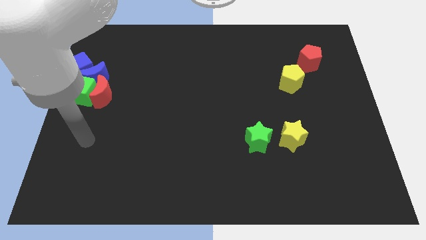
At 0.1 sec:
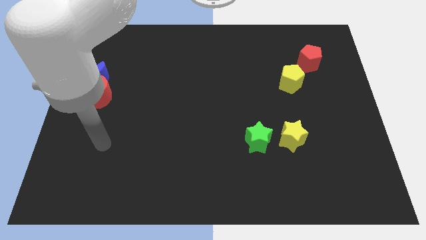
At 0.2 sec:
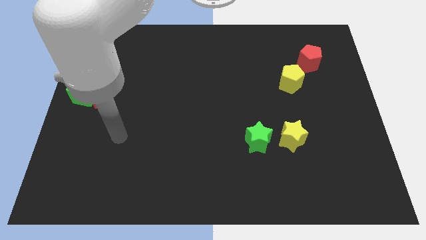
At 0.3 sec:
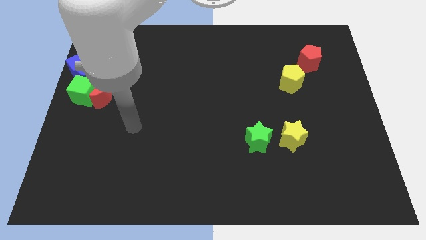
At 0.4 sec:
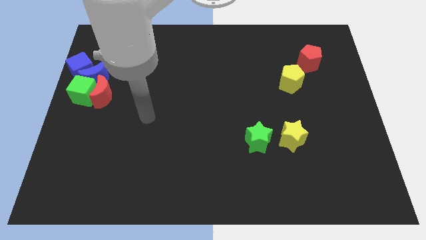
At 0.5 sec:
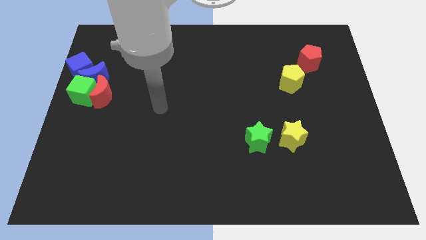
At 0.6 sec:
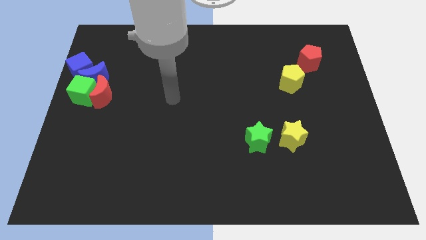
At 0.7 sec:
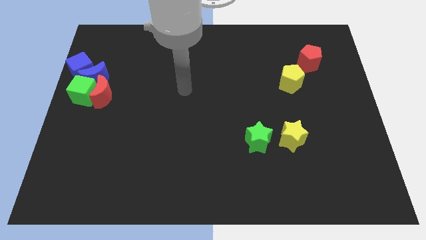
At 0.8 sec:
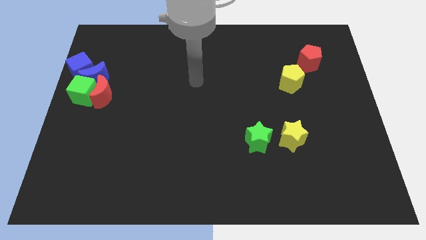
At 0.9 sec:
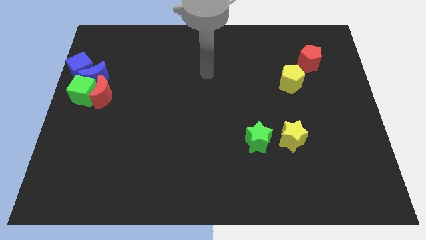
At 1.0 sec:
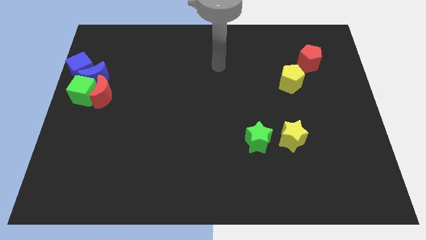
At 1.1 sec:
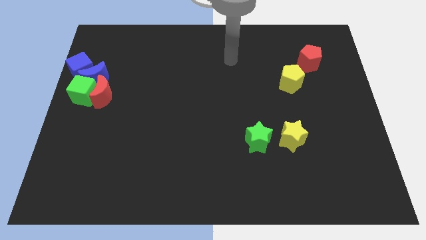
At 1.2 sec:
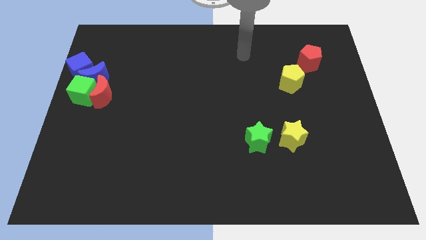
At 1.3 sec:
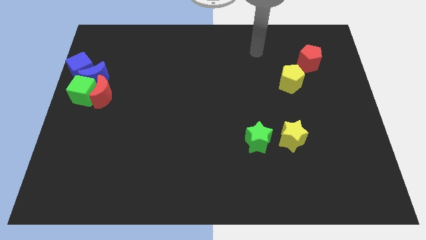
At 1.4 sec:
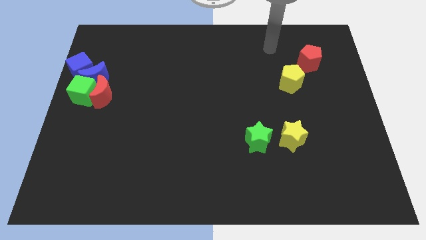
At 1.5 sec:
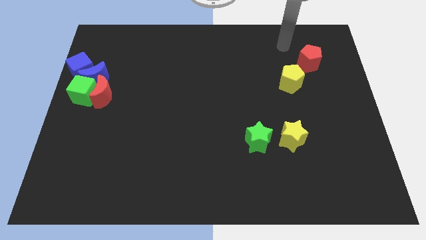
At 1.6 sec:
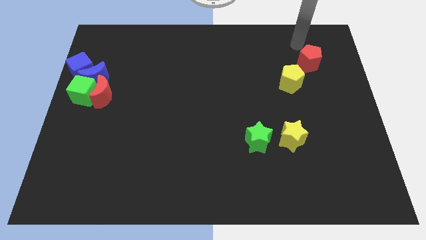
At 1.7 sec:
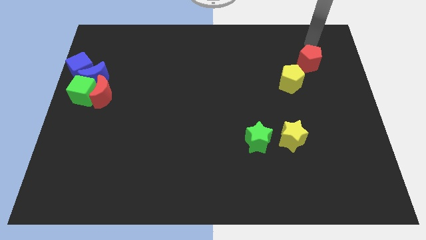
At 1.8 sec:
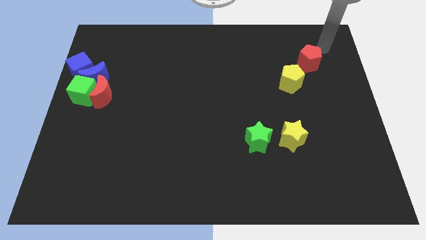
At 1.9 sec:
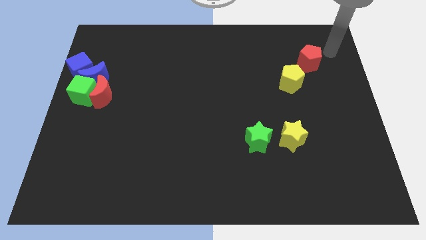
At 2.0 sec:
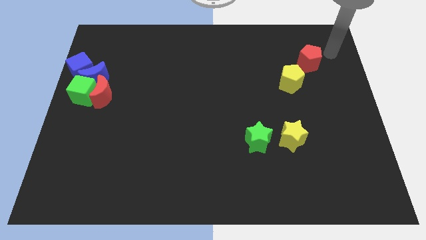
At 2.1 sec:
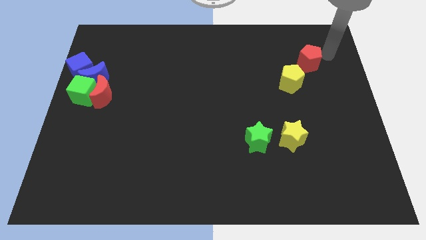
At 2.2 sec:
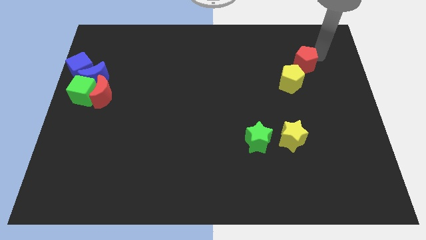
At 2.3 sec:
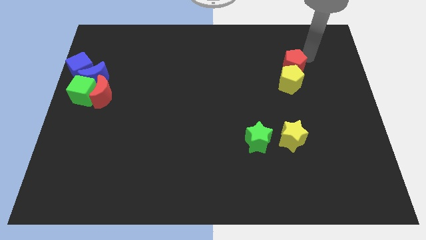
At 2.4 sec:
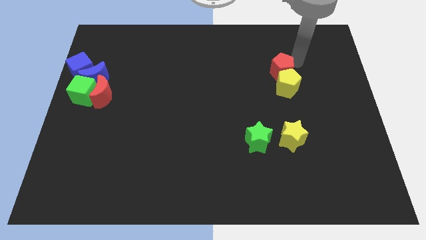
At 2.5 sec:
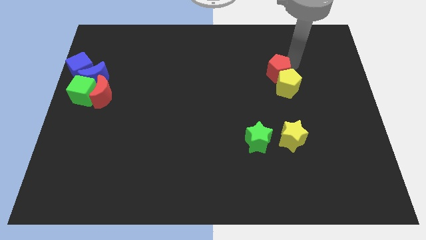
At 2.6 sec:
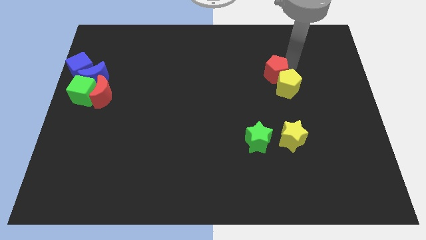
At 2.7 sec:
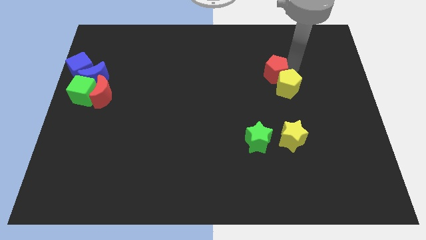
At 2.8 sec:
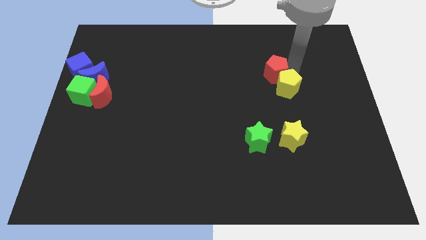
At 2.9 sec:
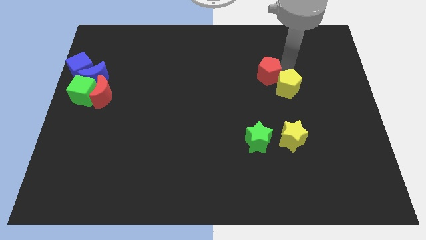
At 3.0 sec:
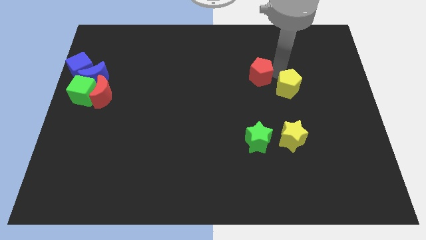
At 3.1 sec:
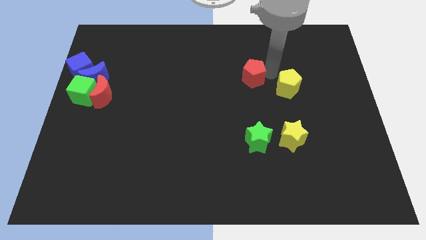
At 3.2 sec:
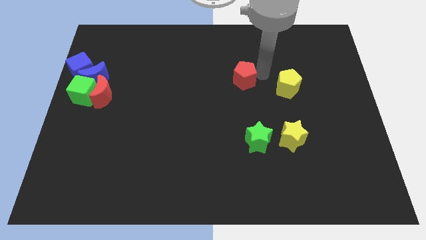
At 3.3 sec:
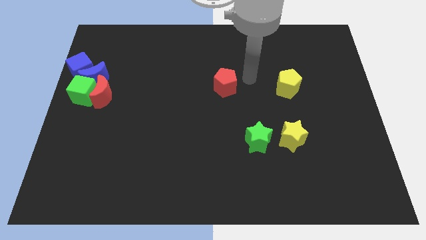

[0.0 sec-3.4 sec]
put the red pentagon to the left side of the yellow pentagon

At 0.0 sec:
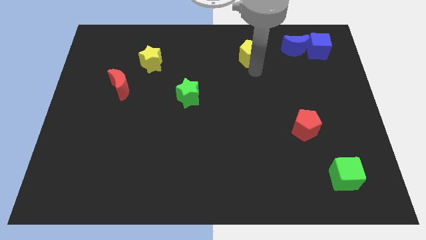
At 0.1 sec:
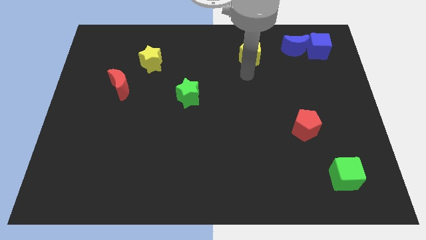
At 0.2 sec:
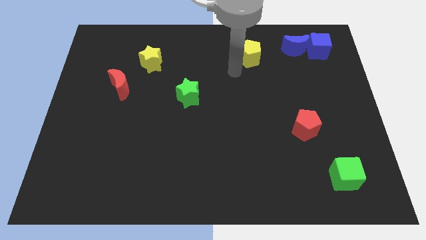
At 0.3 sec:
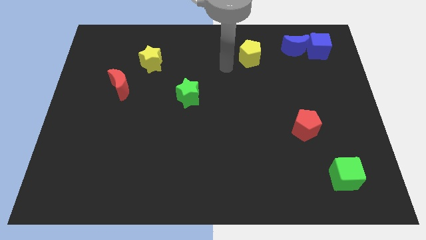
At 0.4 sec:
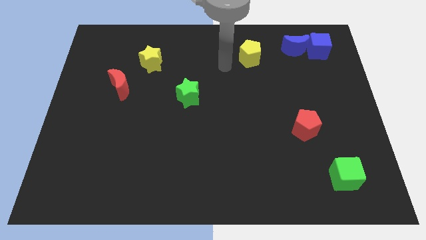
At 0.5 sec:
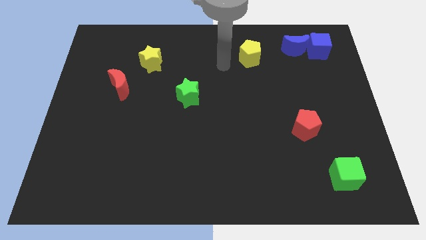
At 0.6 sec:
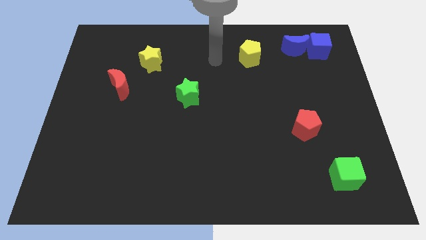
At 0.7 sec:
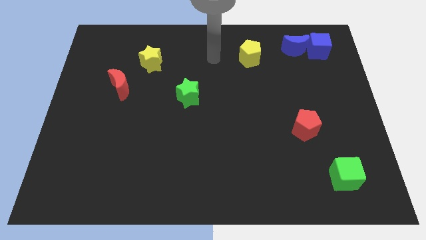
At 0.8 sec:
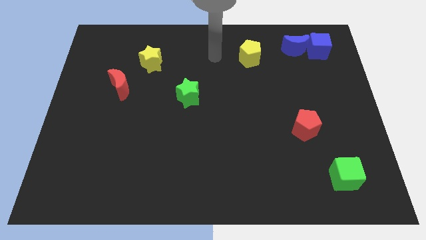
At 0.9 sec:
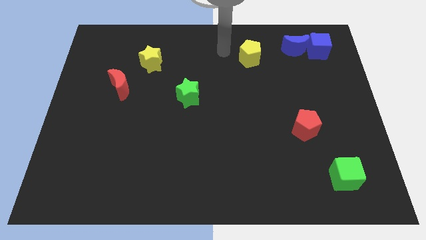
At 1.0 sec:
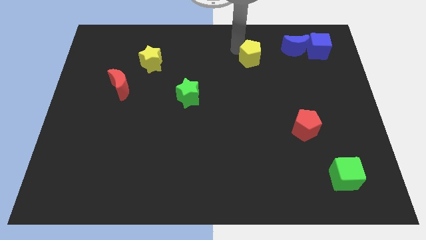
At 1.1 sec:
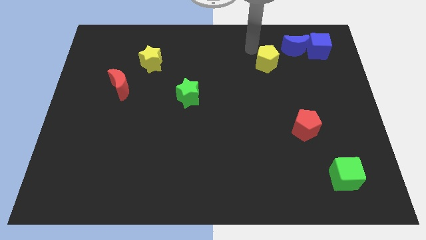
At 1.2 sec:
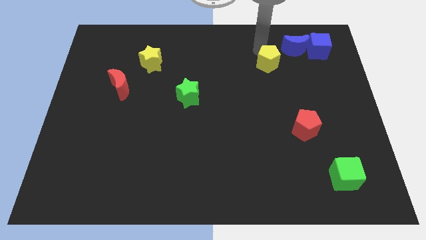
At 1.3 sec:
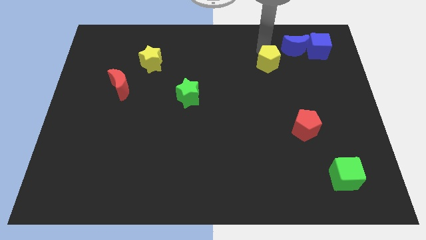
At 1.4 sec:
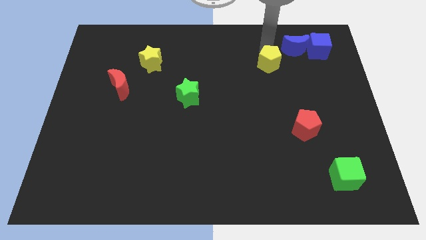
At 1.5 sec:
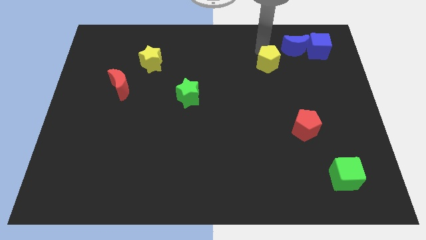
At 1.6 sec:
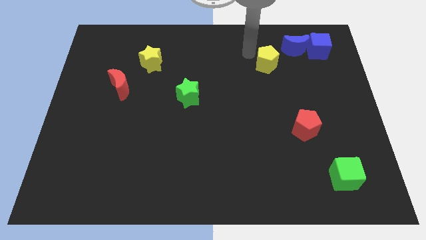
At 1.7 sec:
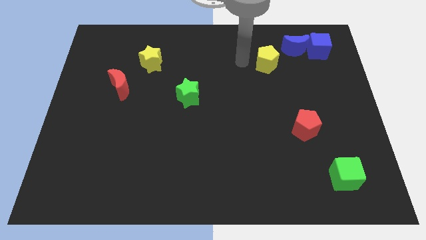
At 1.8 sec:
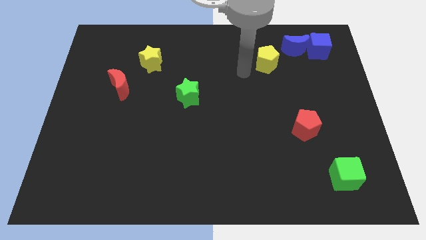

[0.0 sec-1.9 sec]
push the yellow pentagon parallel to the right of the yellow star

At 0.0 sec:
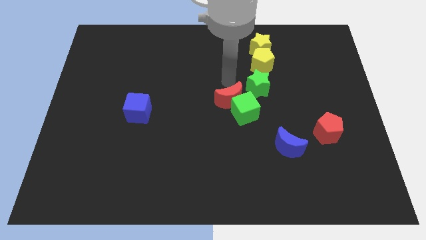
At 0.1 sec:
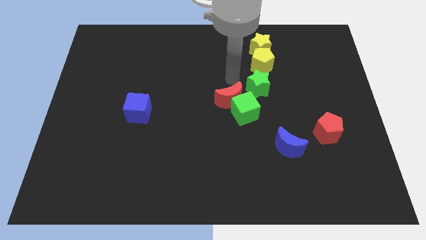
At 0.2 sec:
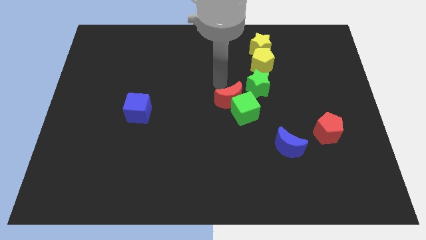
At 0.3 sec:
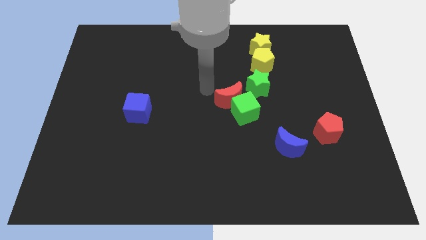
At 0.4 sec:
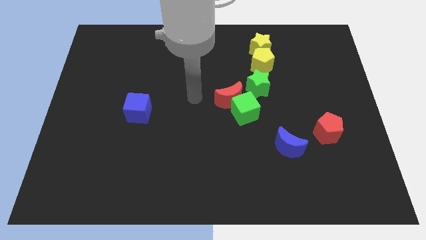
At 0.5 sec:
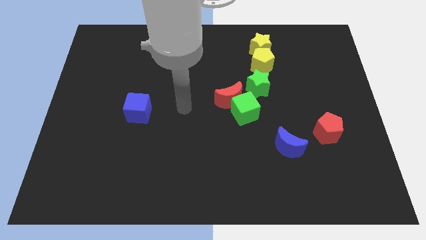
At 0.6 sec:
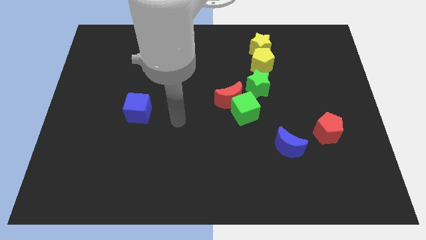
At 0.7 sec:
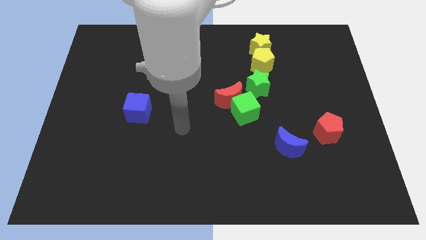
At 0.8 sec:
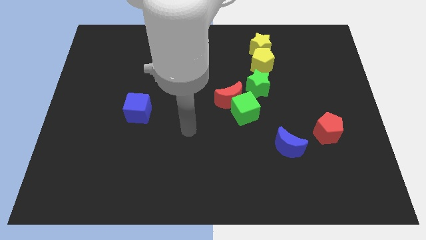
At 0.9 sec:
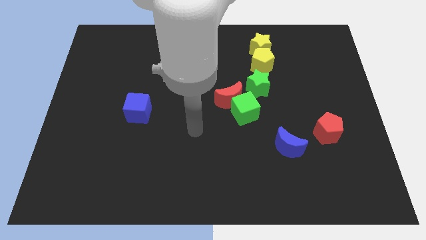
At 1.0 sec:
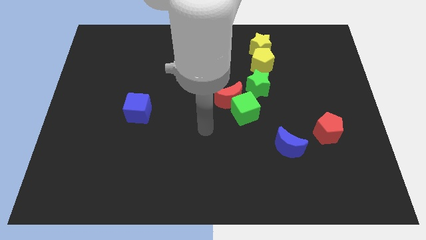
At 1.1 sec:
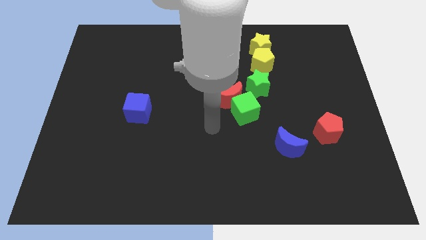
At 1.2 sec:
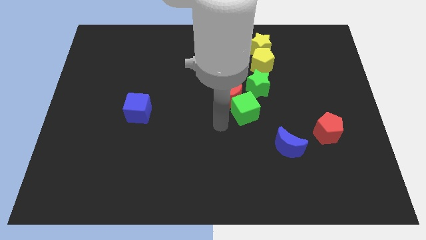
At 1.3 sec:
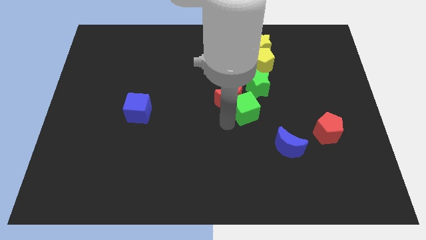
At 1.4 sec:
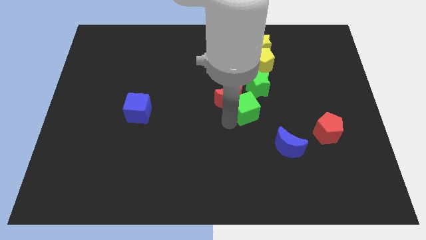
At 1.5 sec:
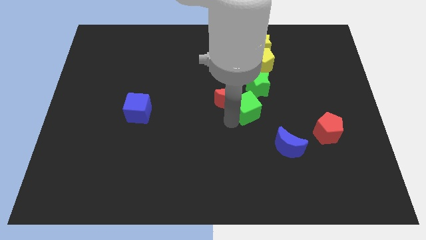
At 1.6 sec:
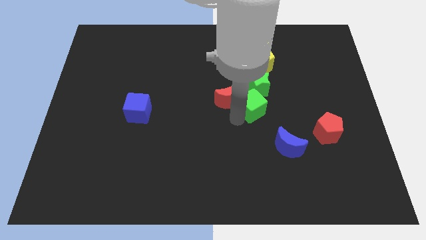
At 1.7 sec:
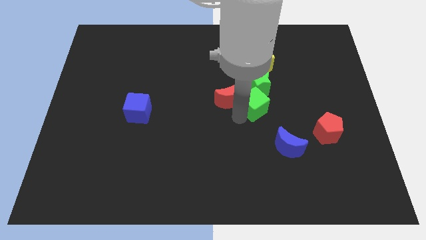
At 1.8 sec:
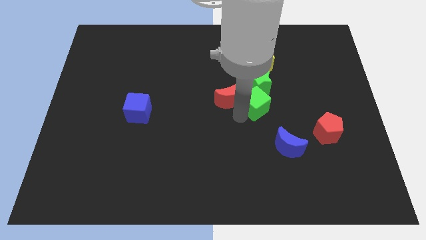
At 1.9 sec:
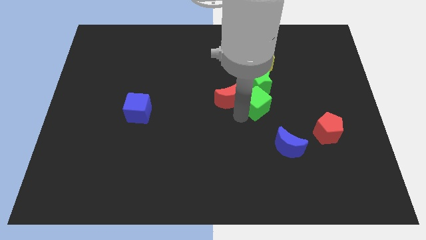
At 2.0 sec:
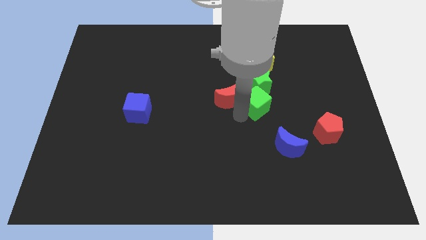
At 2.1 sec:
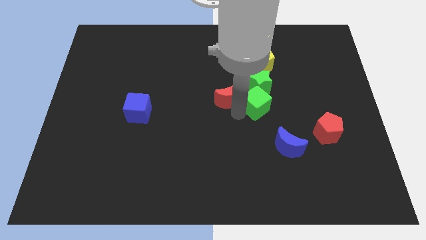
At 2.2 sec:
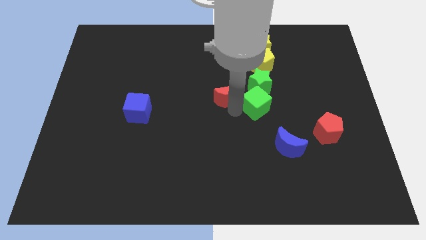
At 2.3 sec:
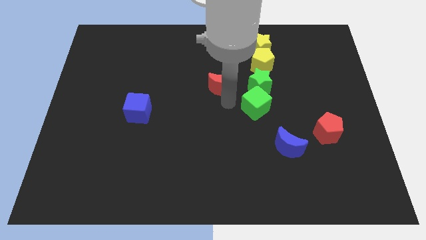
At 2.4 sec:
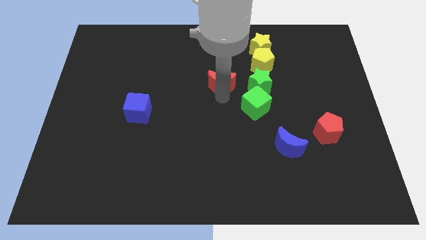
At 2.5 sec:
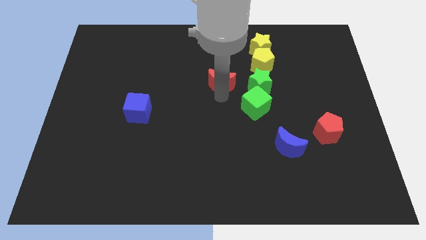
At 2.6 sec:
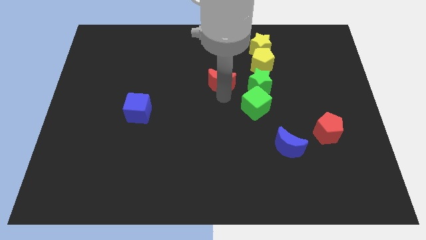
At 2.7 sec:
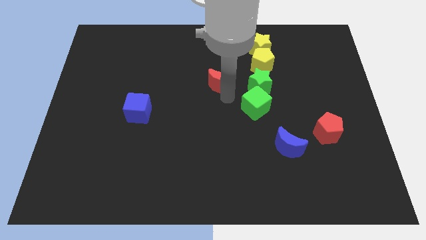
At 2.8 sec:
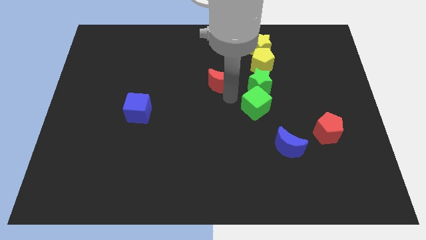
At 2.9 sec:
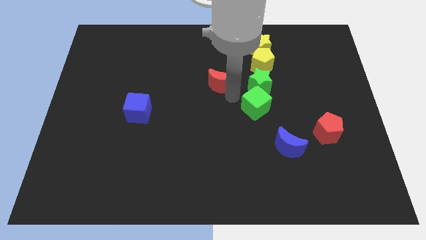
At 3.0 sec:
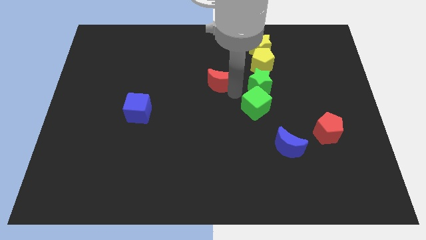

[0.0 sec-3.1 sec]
push the green cube into green star

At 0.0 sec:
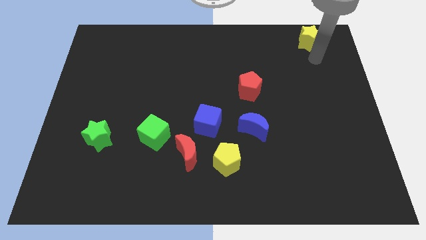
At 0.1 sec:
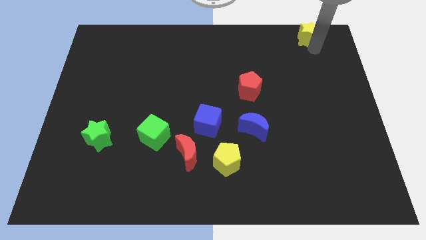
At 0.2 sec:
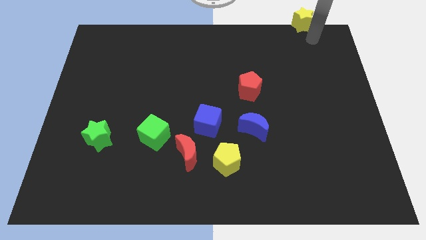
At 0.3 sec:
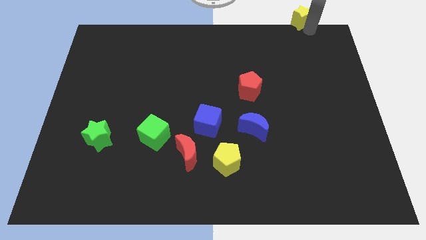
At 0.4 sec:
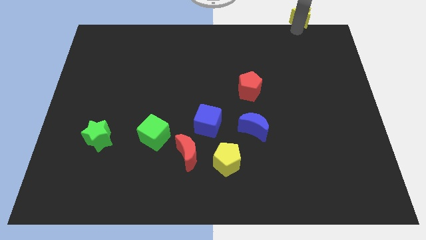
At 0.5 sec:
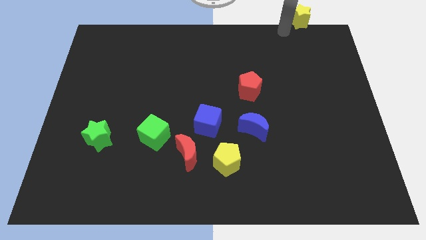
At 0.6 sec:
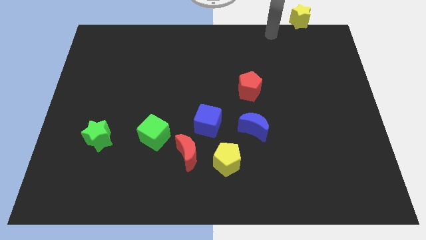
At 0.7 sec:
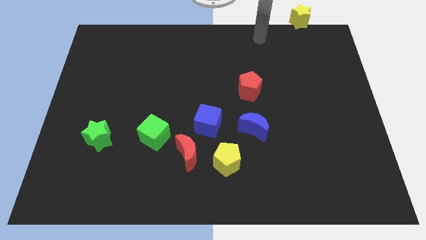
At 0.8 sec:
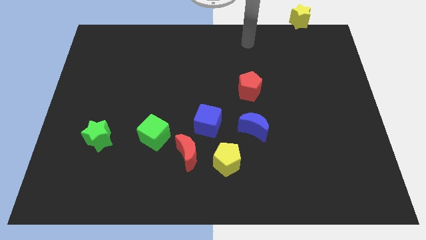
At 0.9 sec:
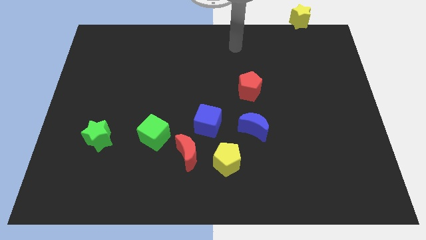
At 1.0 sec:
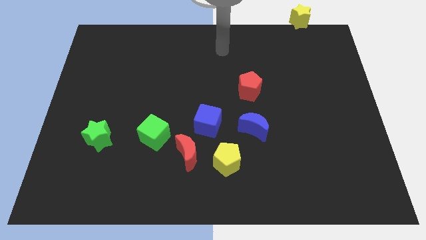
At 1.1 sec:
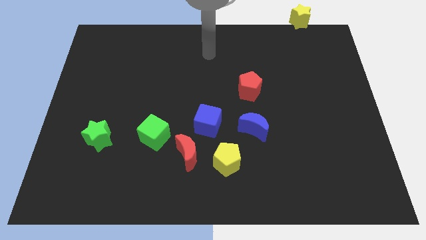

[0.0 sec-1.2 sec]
push the yellow star to the top side
